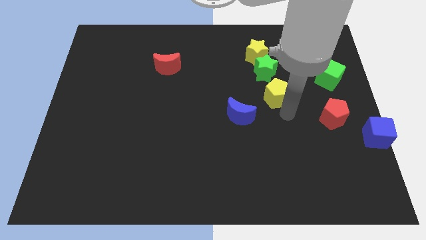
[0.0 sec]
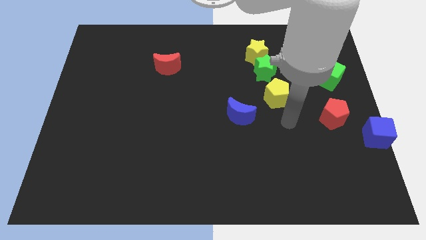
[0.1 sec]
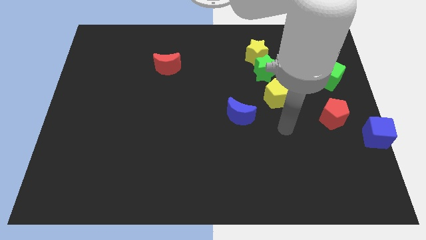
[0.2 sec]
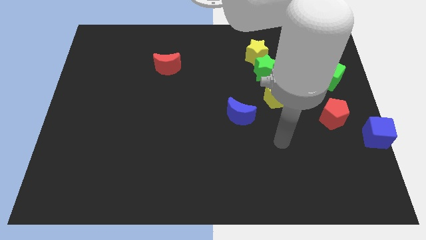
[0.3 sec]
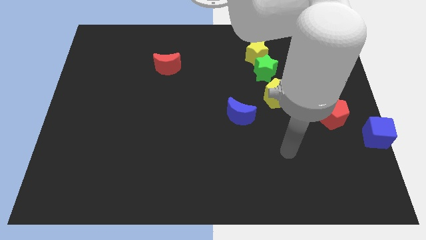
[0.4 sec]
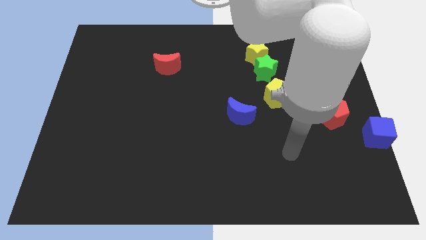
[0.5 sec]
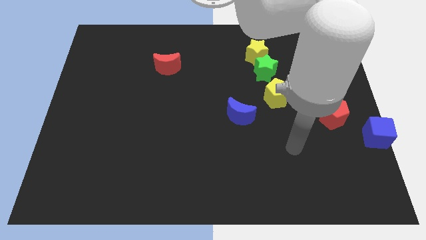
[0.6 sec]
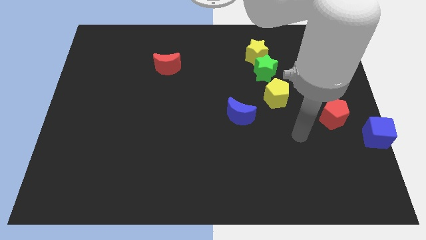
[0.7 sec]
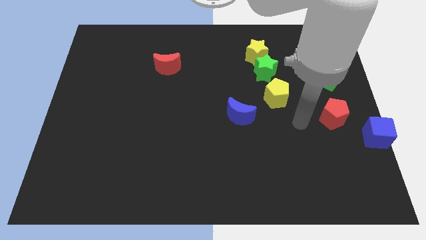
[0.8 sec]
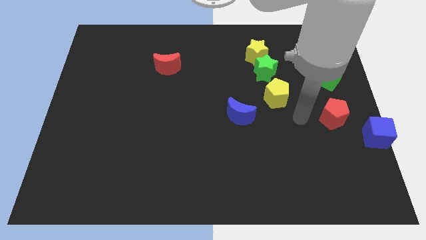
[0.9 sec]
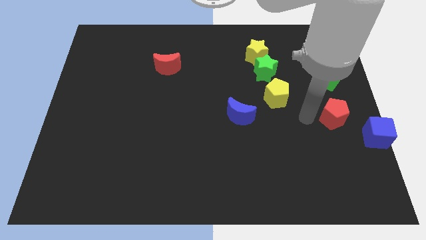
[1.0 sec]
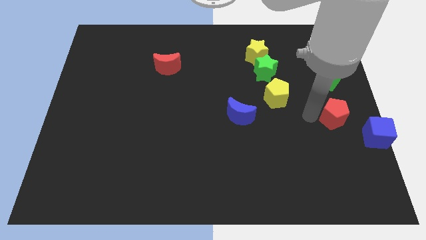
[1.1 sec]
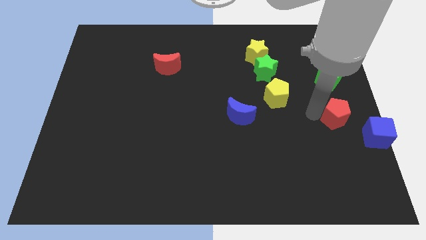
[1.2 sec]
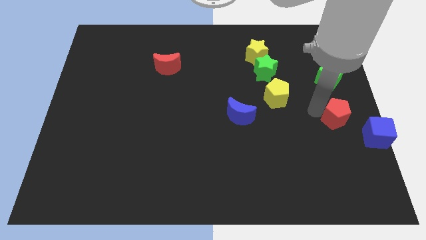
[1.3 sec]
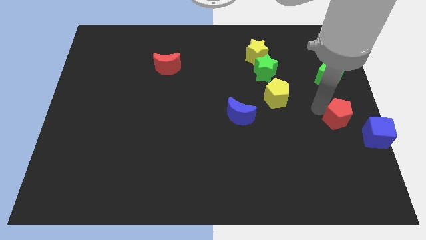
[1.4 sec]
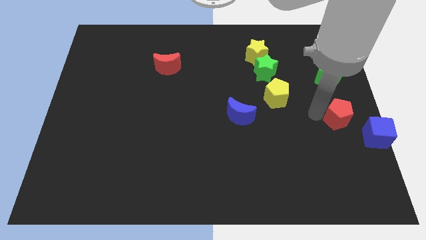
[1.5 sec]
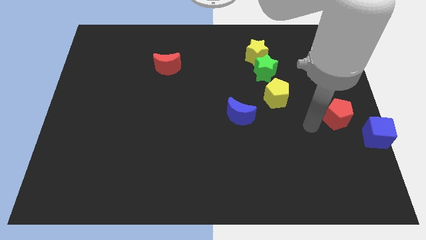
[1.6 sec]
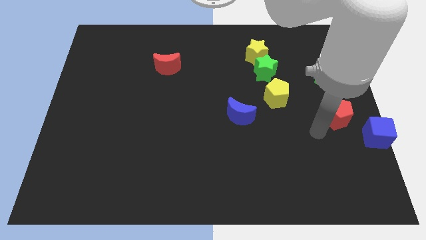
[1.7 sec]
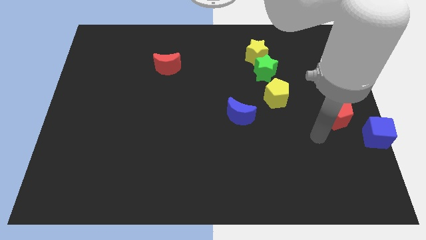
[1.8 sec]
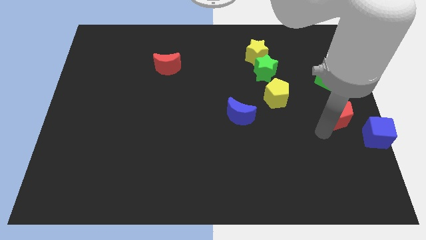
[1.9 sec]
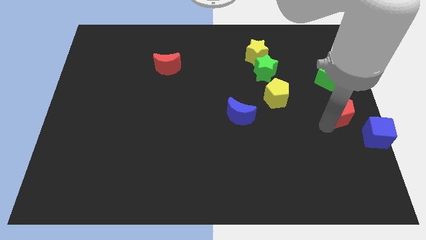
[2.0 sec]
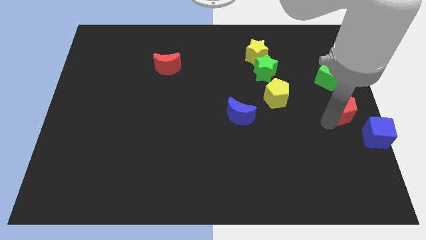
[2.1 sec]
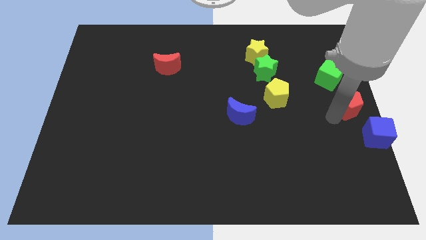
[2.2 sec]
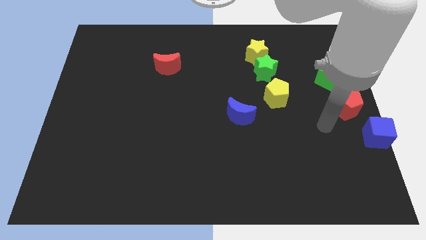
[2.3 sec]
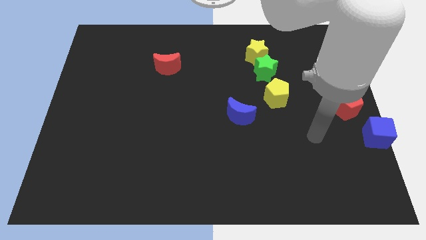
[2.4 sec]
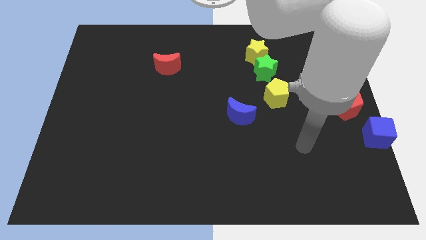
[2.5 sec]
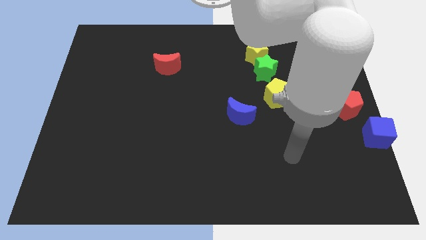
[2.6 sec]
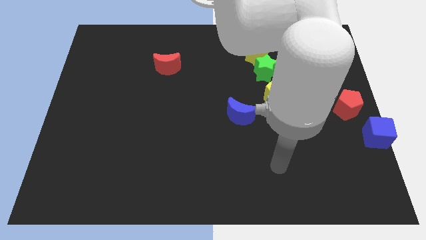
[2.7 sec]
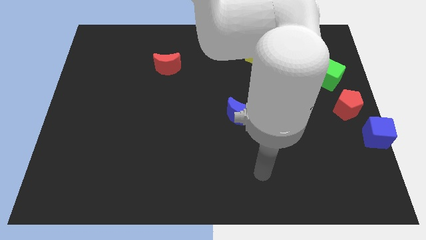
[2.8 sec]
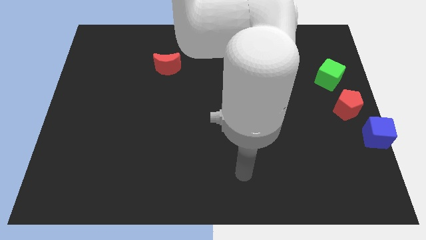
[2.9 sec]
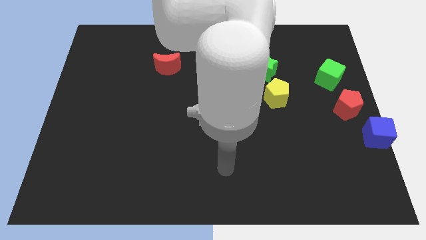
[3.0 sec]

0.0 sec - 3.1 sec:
move the red pentagon slightly to the right

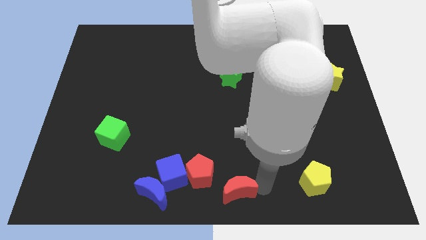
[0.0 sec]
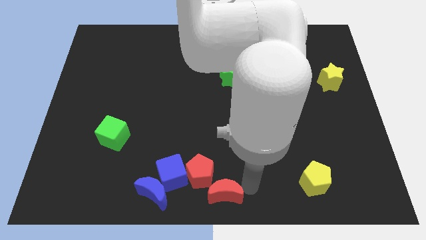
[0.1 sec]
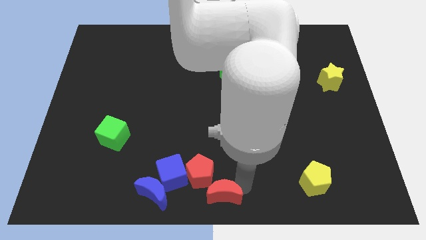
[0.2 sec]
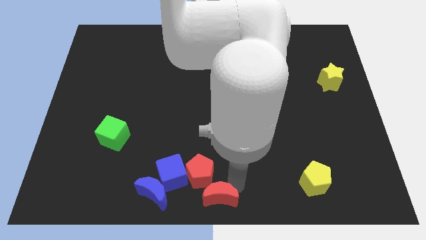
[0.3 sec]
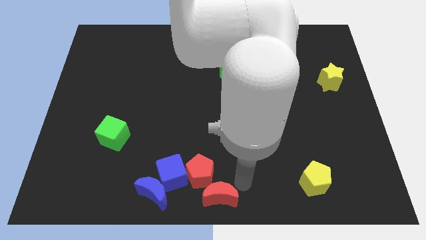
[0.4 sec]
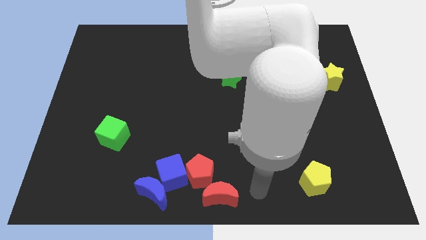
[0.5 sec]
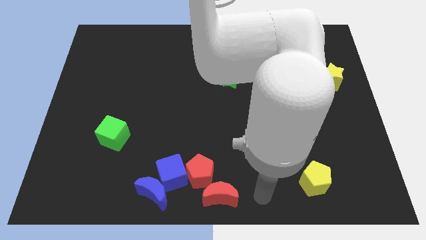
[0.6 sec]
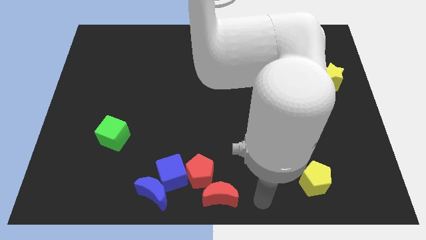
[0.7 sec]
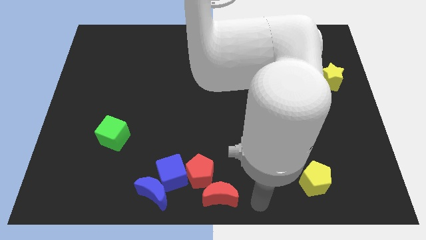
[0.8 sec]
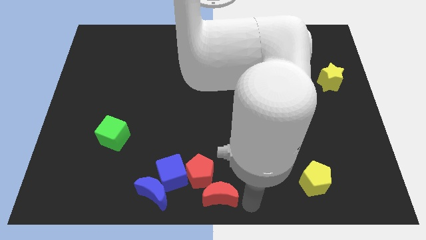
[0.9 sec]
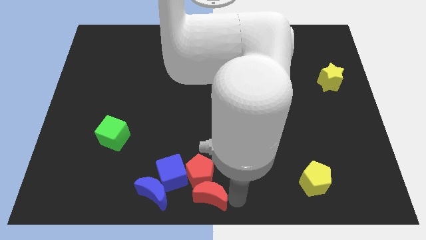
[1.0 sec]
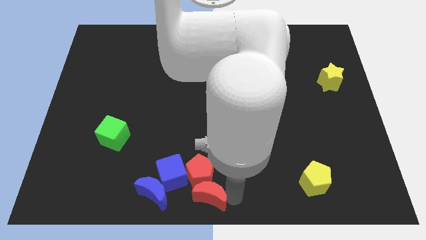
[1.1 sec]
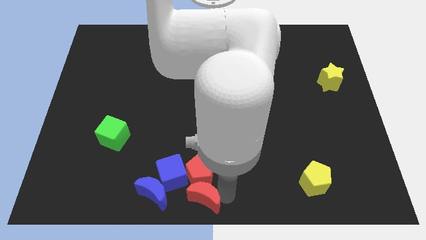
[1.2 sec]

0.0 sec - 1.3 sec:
move the red crescent below the red pentagon

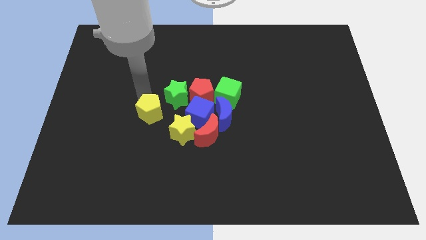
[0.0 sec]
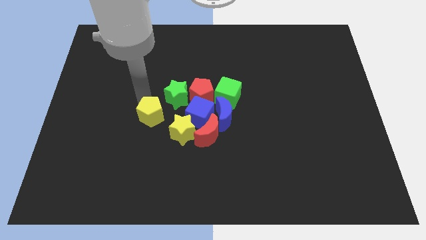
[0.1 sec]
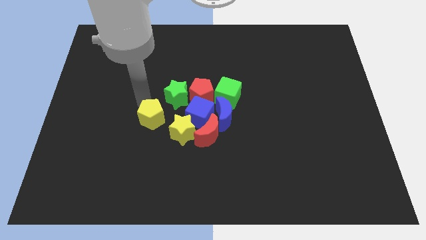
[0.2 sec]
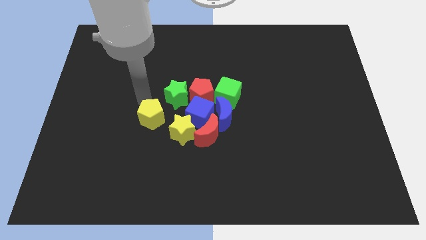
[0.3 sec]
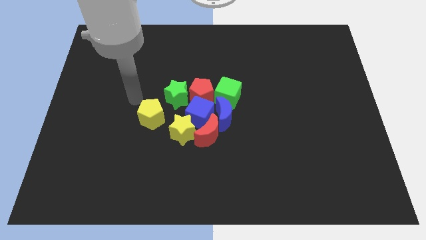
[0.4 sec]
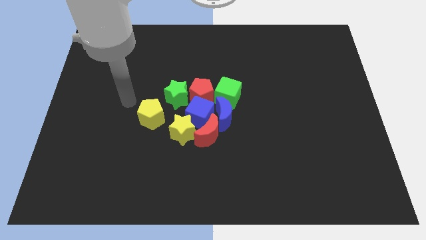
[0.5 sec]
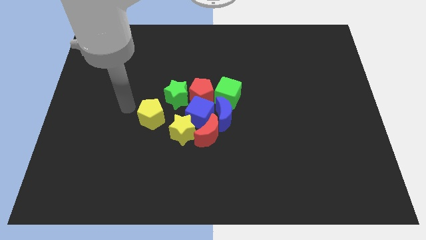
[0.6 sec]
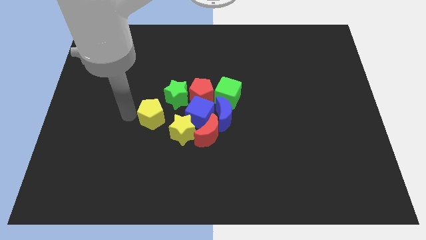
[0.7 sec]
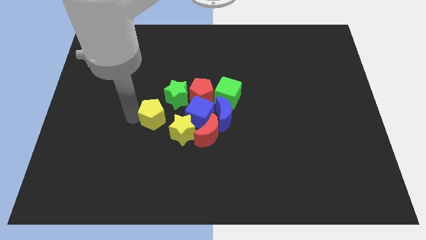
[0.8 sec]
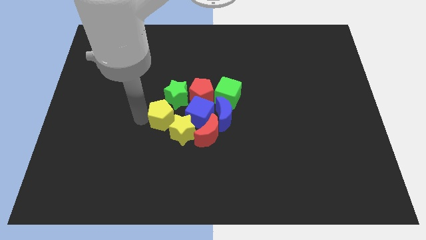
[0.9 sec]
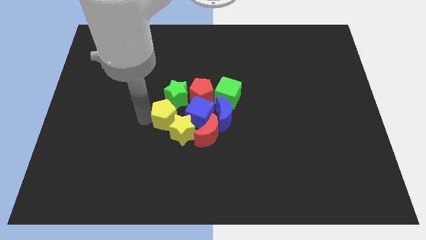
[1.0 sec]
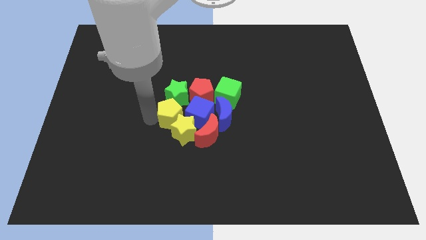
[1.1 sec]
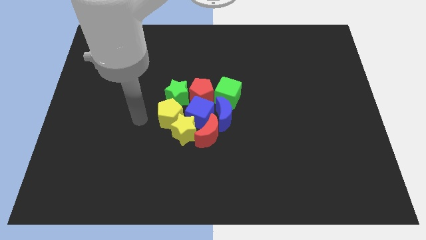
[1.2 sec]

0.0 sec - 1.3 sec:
push the yellow pentagon into the group of blocks

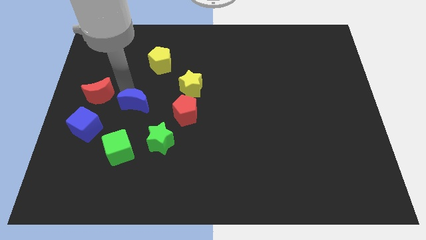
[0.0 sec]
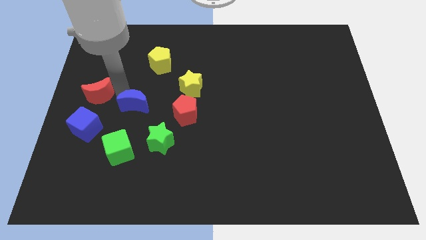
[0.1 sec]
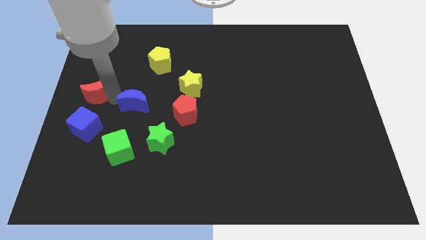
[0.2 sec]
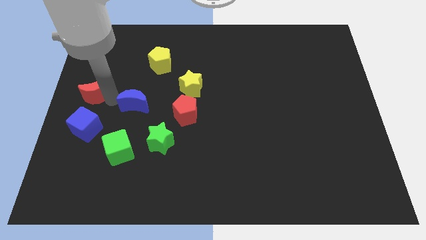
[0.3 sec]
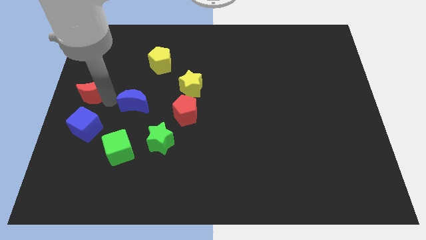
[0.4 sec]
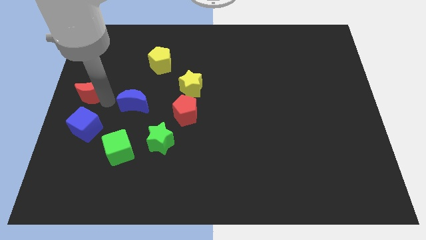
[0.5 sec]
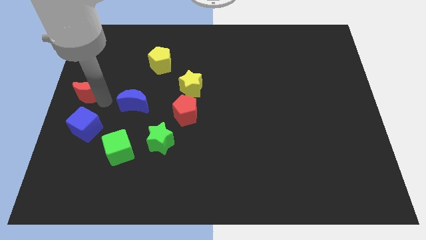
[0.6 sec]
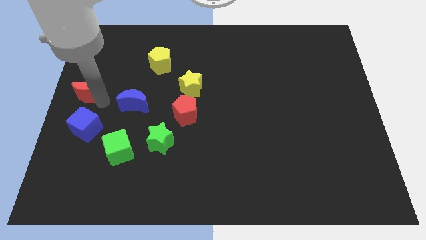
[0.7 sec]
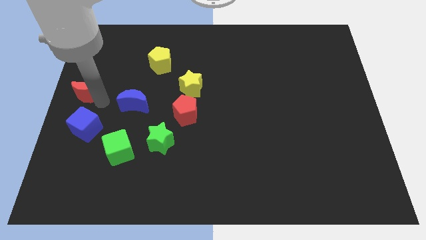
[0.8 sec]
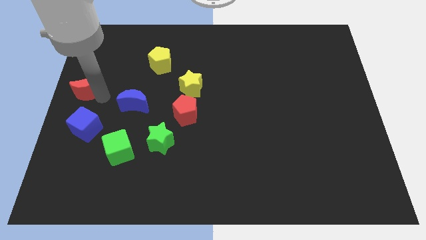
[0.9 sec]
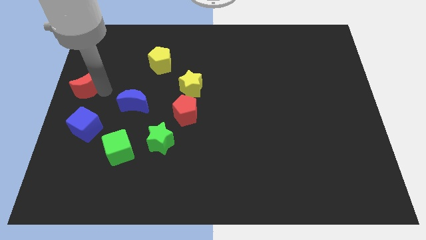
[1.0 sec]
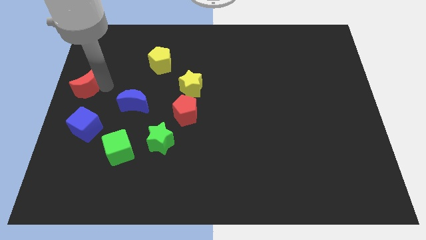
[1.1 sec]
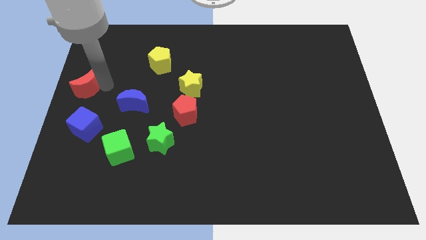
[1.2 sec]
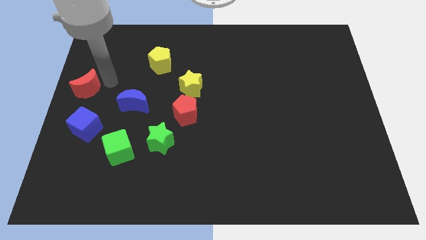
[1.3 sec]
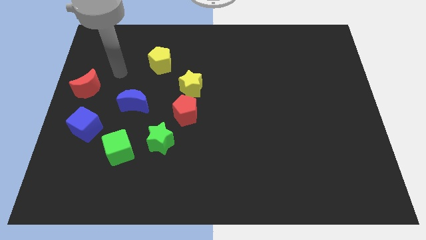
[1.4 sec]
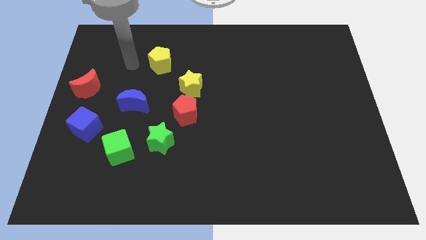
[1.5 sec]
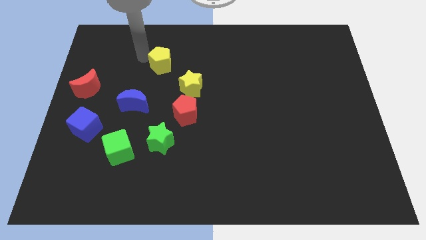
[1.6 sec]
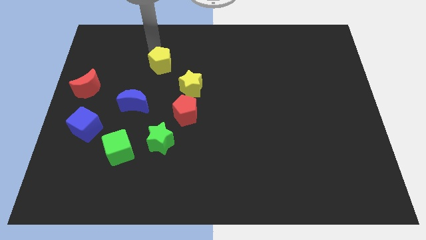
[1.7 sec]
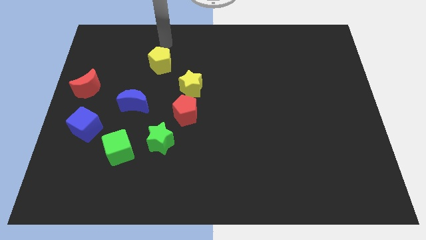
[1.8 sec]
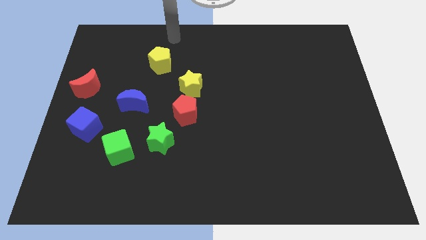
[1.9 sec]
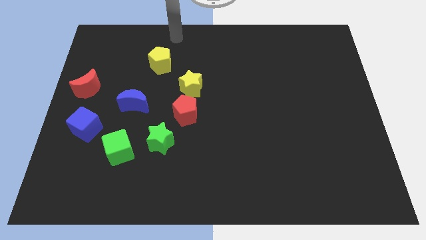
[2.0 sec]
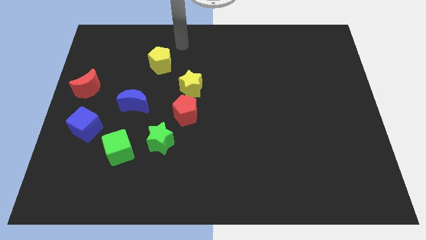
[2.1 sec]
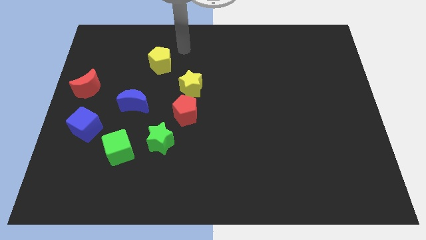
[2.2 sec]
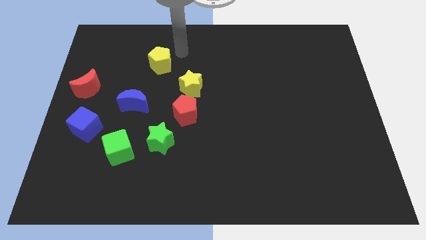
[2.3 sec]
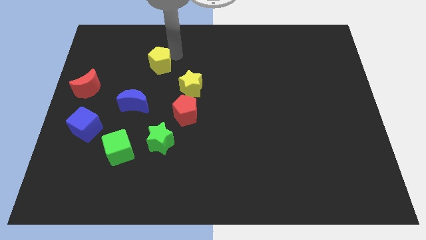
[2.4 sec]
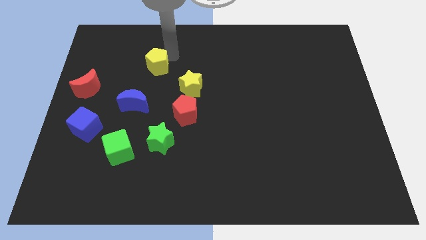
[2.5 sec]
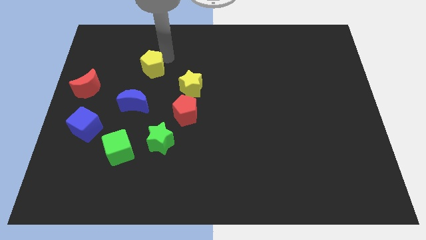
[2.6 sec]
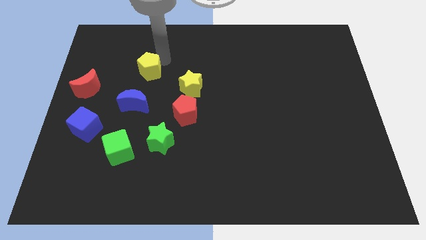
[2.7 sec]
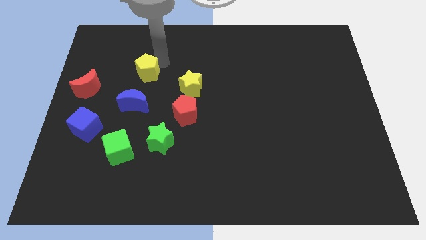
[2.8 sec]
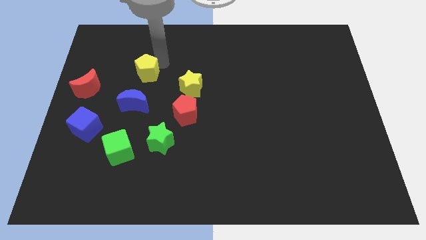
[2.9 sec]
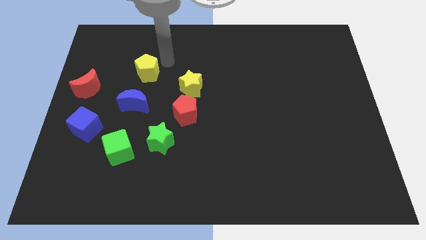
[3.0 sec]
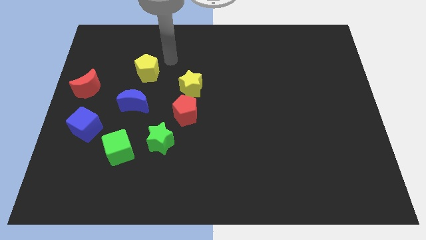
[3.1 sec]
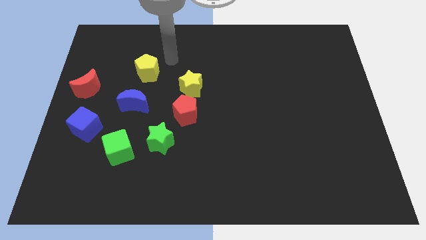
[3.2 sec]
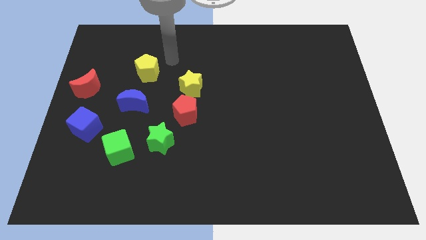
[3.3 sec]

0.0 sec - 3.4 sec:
move yellow pentagon slightly down
